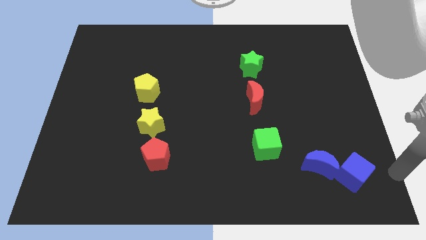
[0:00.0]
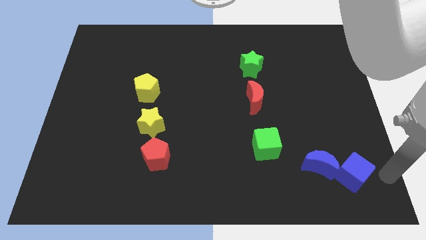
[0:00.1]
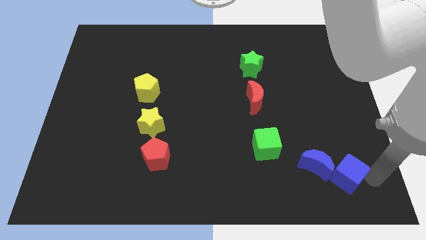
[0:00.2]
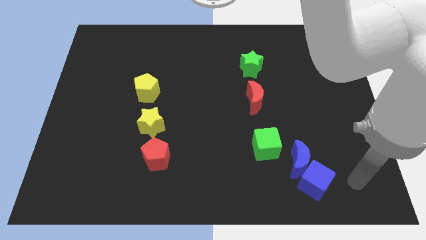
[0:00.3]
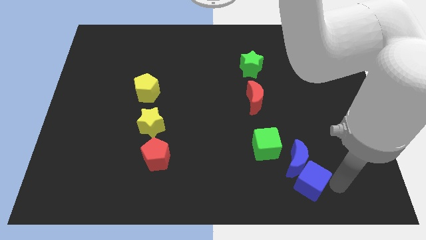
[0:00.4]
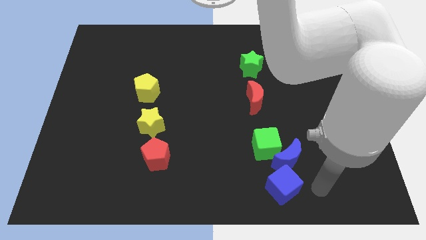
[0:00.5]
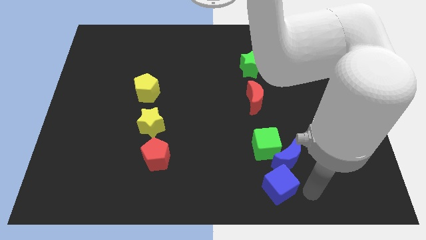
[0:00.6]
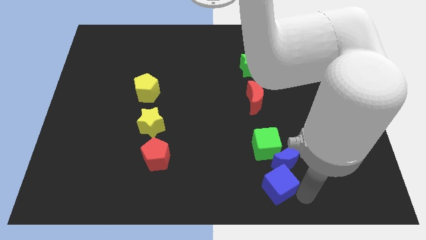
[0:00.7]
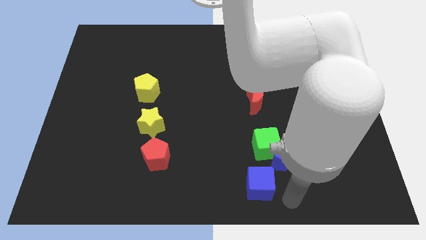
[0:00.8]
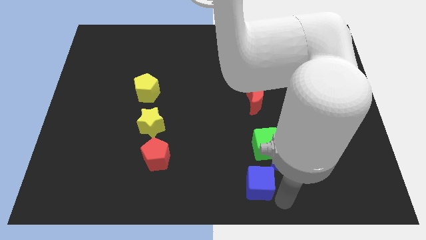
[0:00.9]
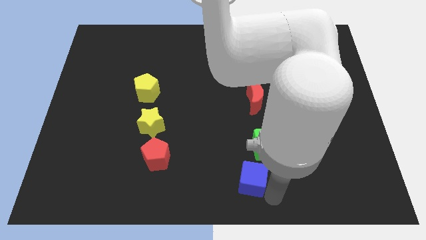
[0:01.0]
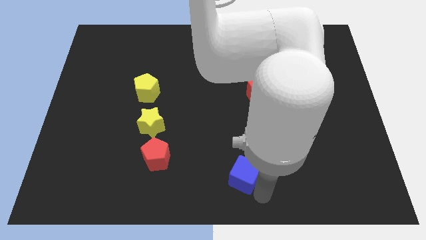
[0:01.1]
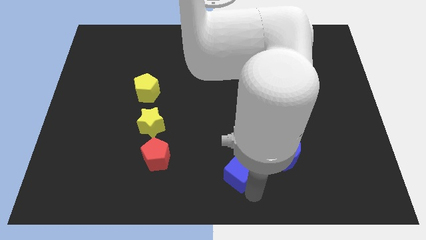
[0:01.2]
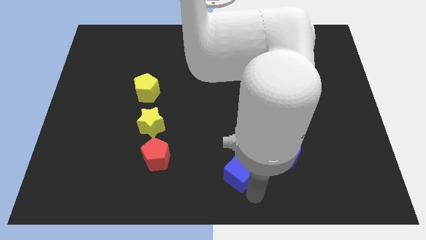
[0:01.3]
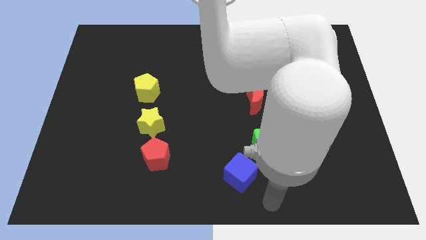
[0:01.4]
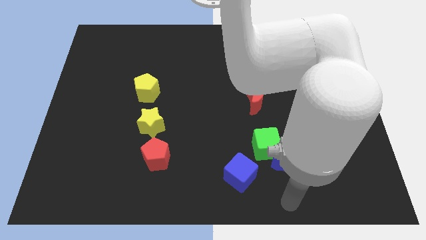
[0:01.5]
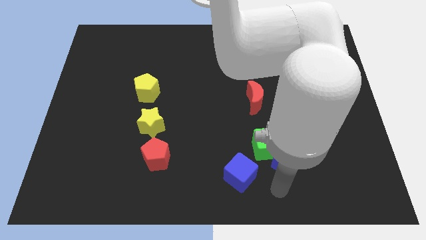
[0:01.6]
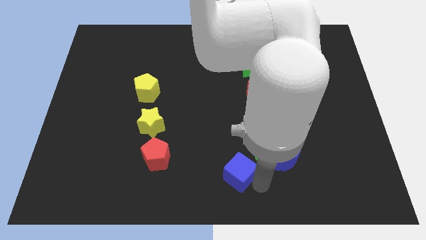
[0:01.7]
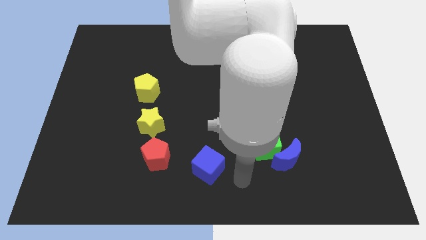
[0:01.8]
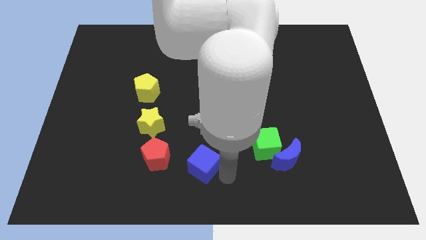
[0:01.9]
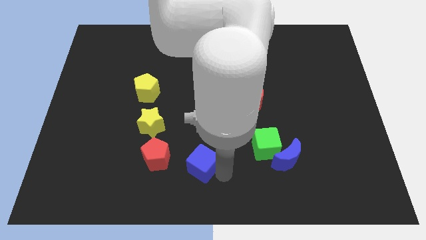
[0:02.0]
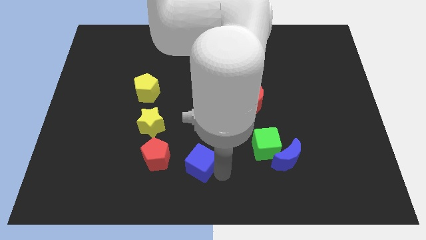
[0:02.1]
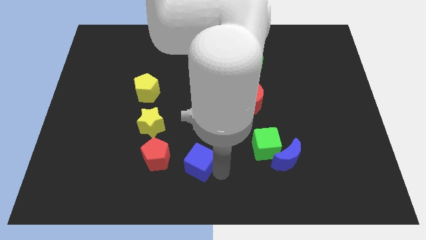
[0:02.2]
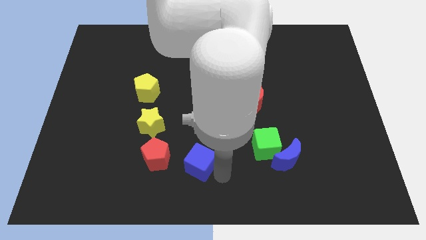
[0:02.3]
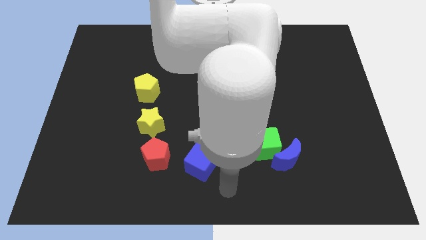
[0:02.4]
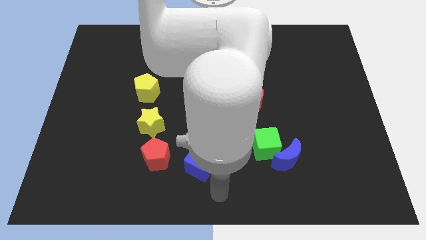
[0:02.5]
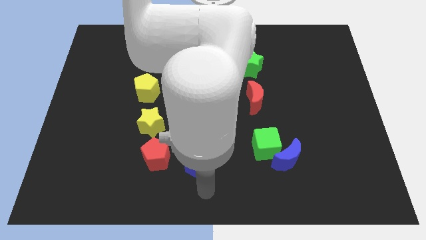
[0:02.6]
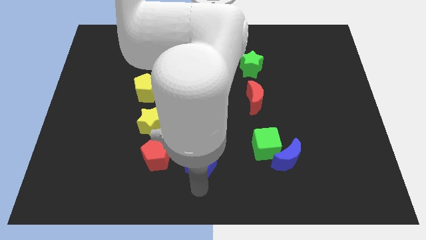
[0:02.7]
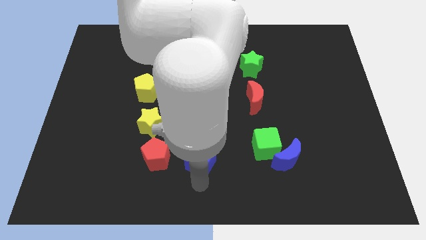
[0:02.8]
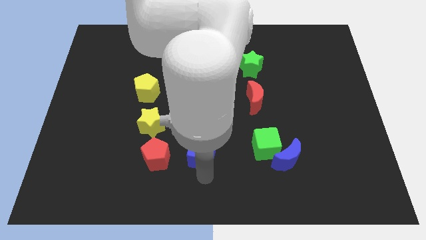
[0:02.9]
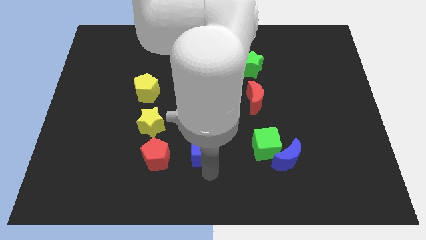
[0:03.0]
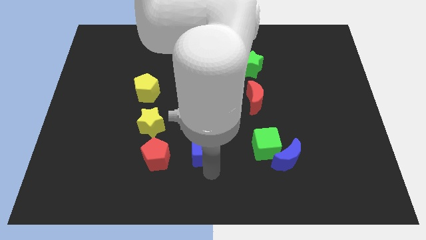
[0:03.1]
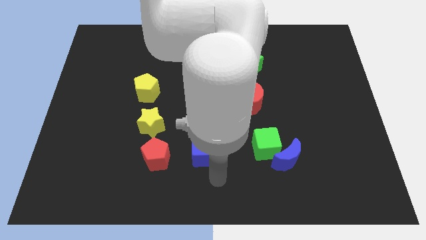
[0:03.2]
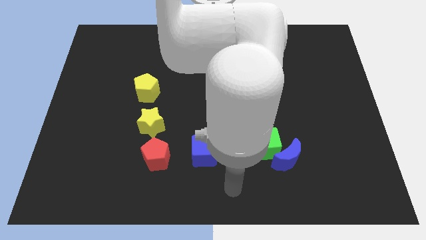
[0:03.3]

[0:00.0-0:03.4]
place blue cube to the center

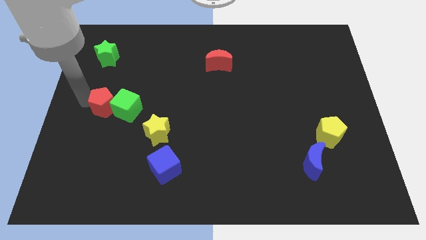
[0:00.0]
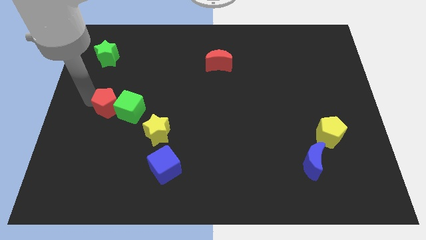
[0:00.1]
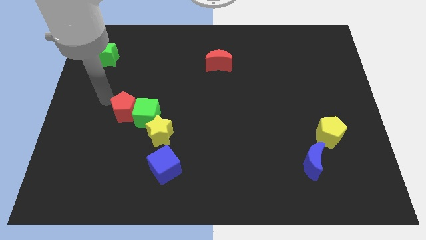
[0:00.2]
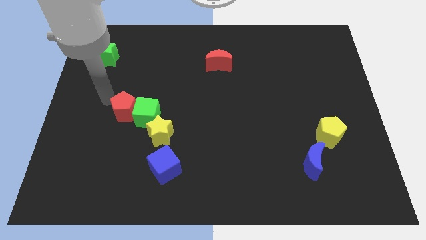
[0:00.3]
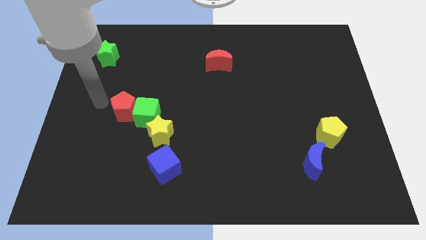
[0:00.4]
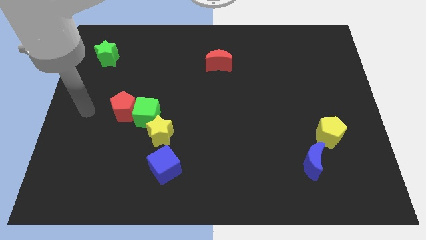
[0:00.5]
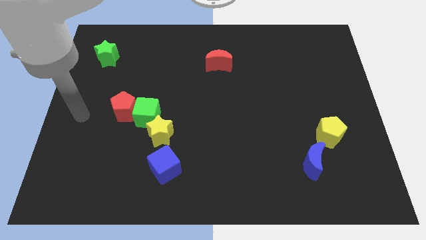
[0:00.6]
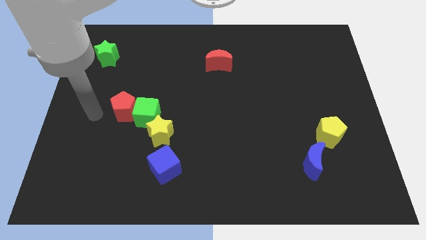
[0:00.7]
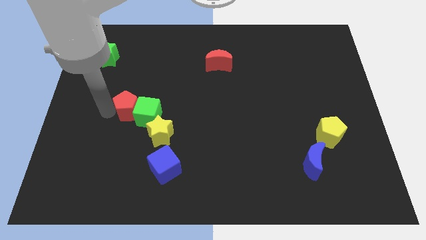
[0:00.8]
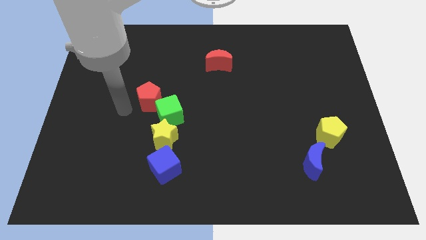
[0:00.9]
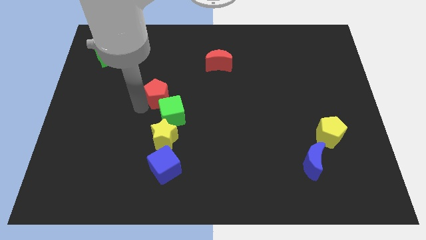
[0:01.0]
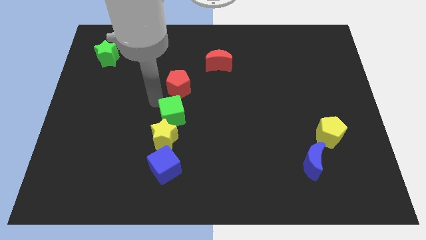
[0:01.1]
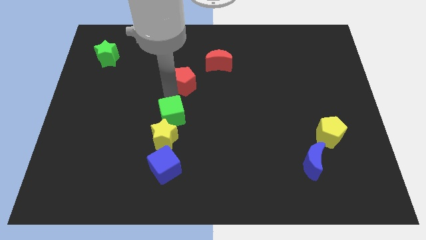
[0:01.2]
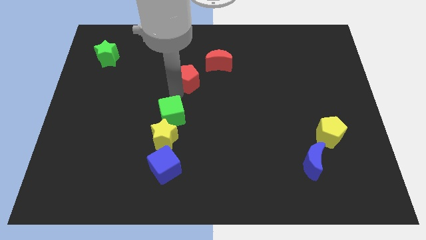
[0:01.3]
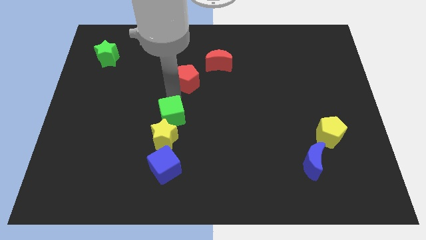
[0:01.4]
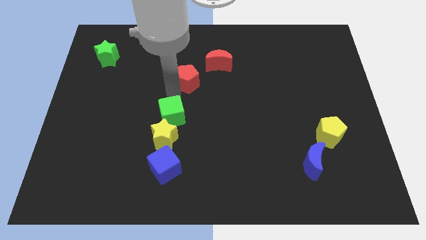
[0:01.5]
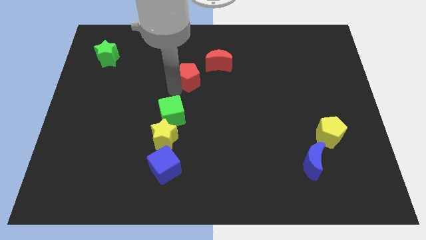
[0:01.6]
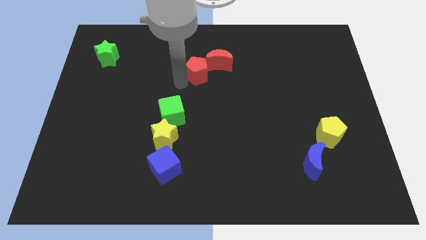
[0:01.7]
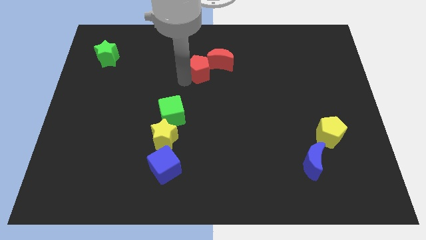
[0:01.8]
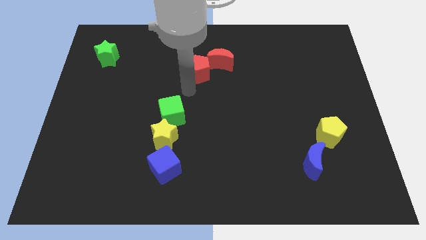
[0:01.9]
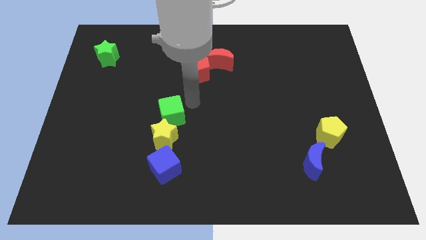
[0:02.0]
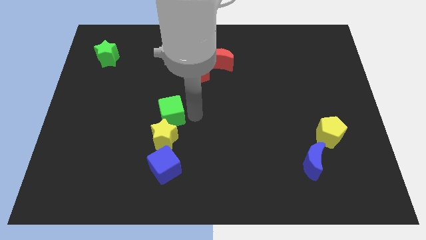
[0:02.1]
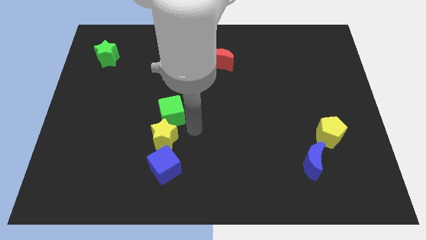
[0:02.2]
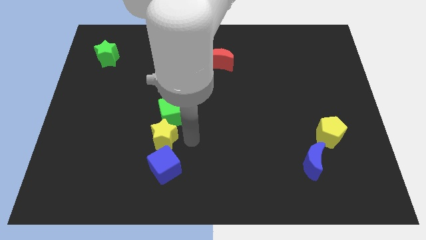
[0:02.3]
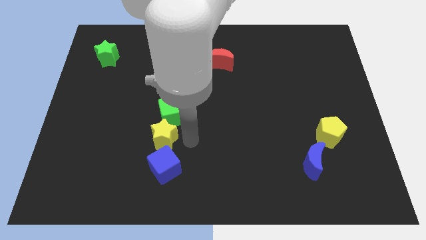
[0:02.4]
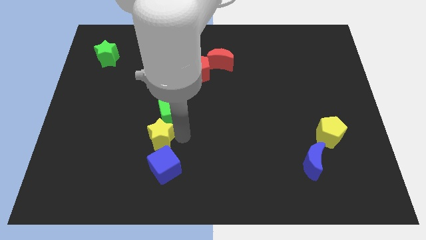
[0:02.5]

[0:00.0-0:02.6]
place the red pentagon above the green cube

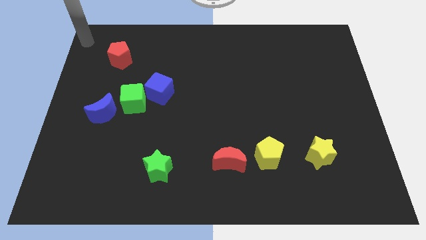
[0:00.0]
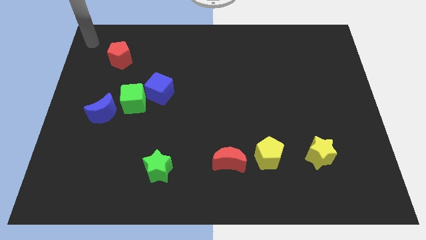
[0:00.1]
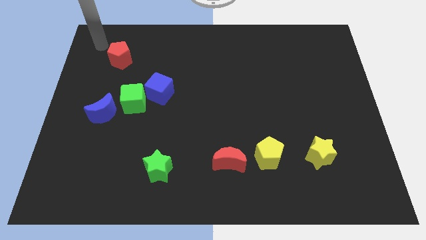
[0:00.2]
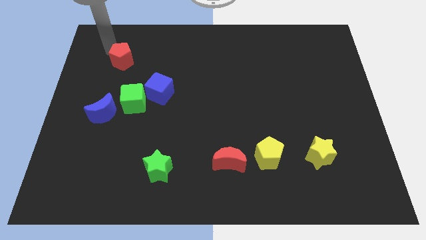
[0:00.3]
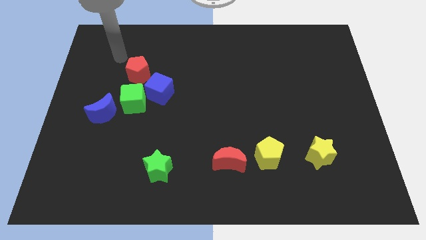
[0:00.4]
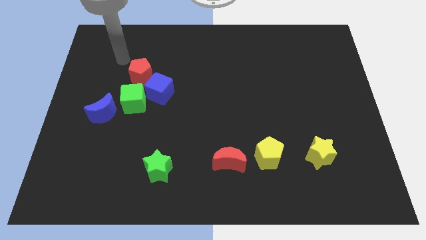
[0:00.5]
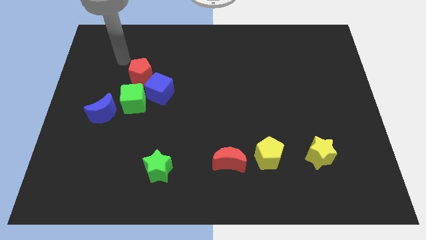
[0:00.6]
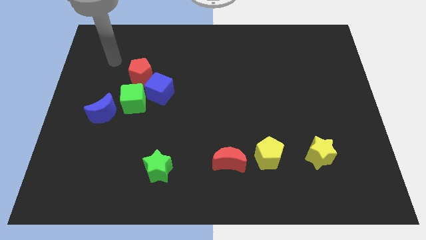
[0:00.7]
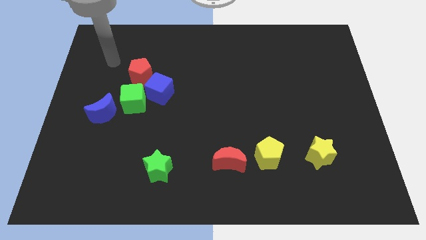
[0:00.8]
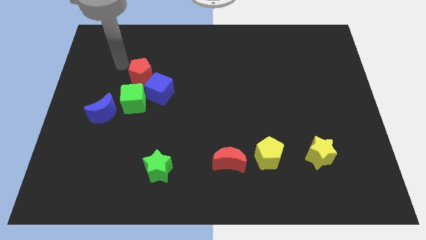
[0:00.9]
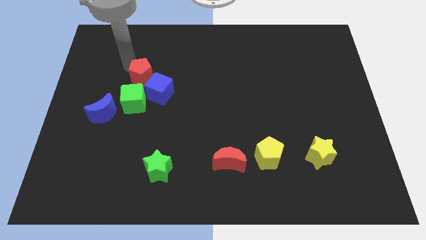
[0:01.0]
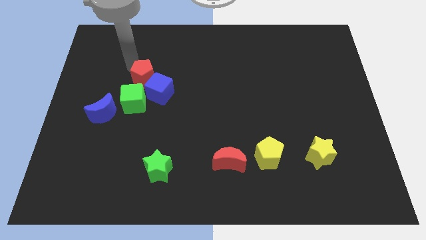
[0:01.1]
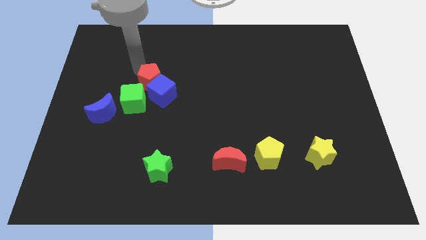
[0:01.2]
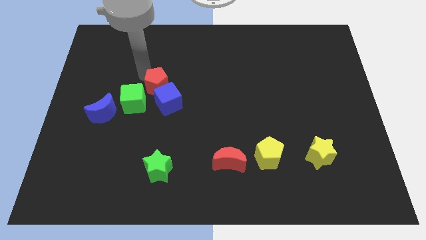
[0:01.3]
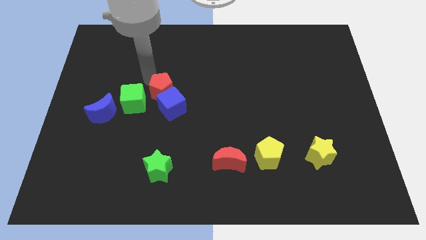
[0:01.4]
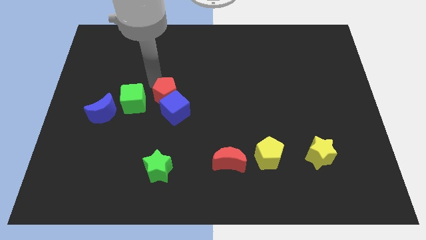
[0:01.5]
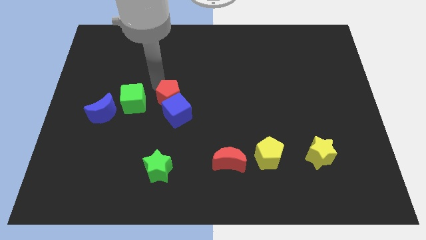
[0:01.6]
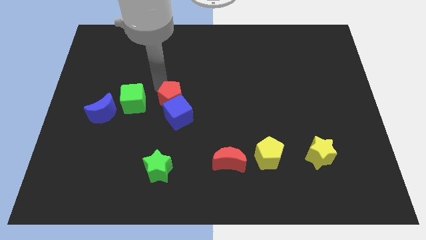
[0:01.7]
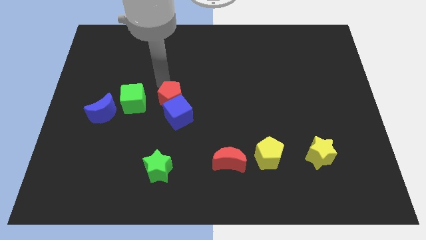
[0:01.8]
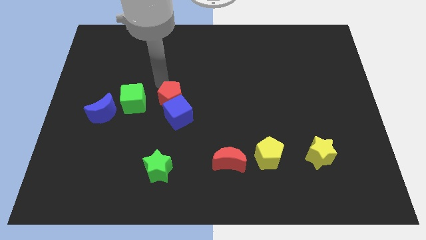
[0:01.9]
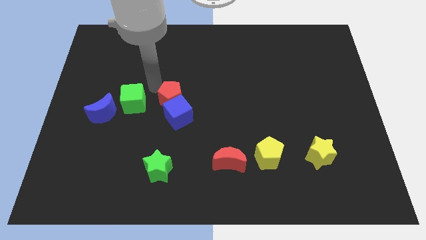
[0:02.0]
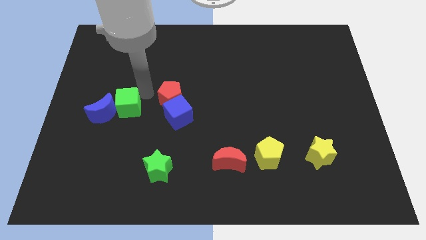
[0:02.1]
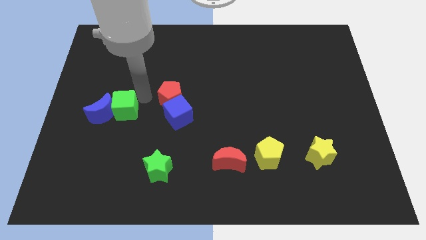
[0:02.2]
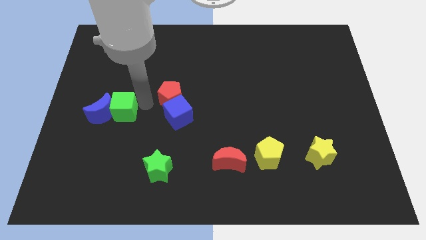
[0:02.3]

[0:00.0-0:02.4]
push red pentagon into blue cube

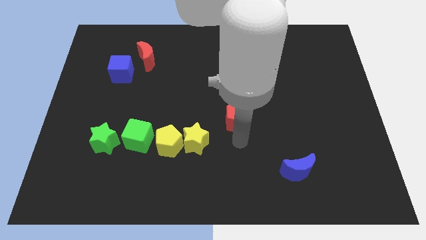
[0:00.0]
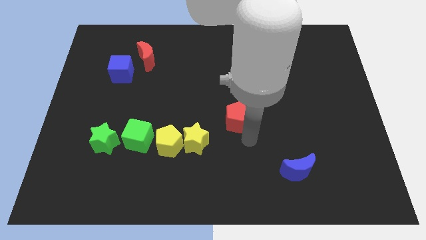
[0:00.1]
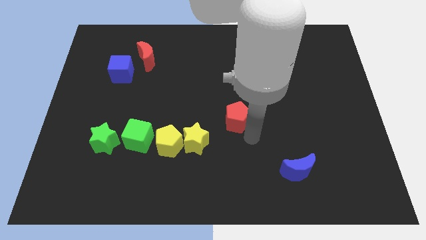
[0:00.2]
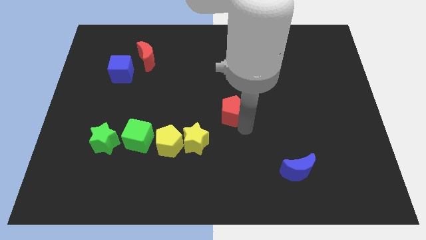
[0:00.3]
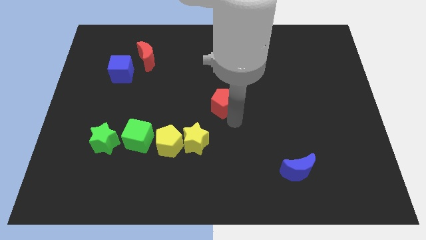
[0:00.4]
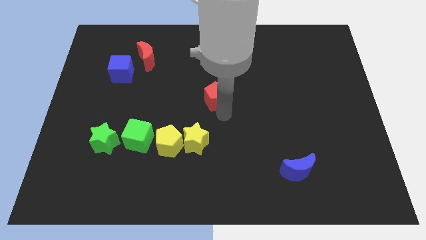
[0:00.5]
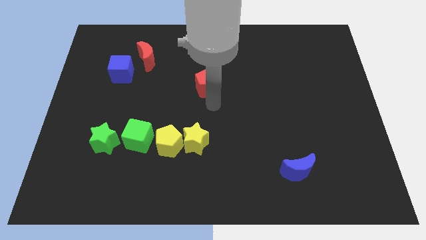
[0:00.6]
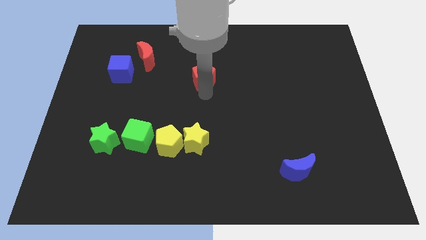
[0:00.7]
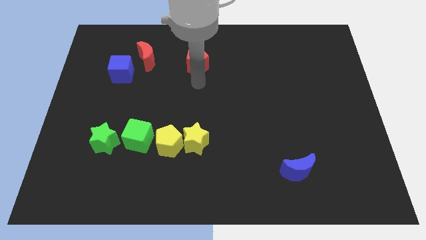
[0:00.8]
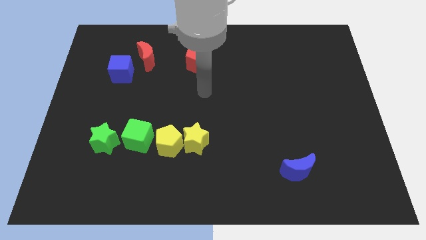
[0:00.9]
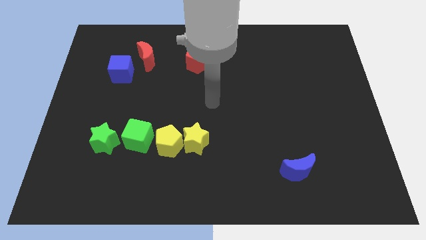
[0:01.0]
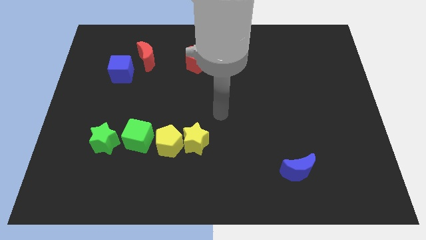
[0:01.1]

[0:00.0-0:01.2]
move the red pentagon vertically to the top side of the yellow star
